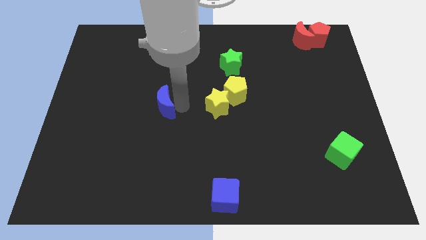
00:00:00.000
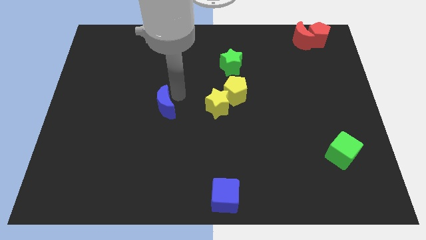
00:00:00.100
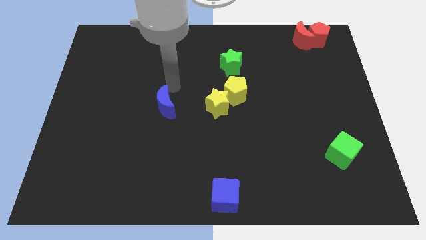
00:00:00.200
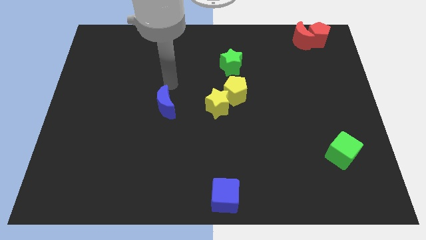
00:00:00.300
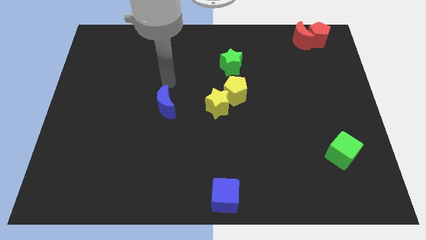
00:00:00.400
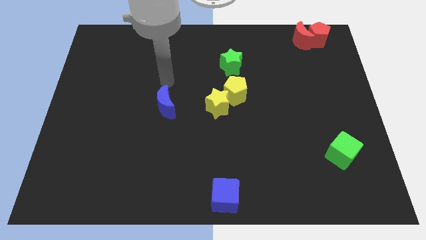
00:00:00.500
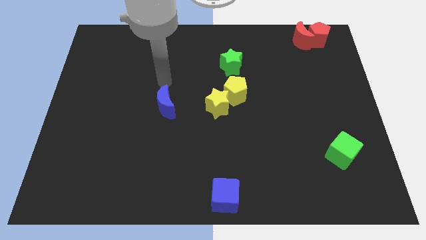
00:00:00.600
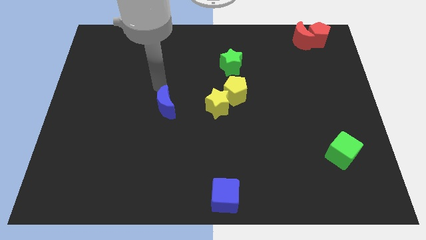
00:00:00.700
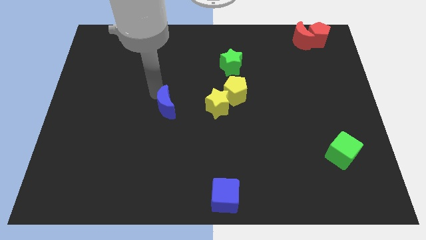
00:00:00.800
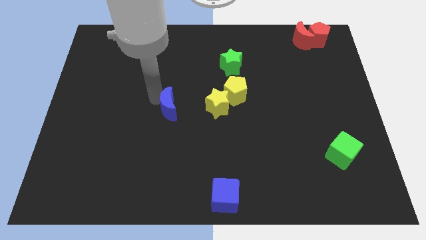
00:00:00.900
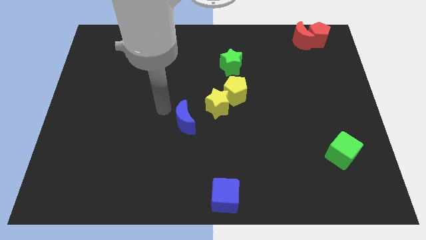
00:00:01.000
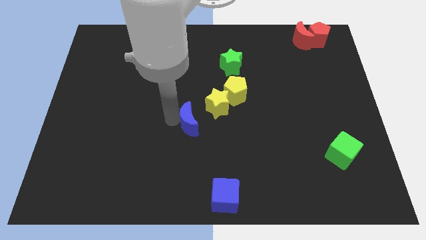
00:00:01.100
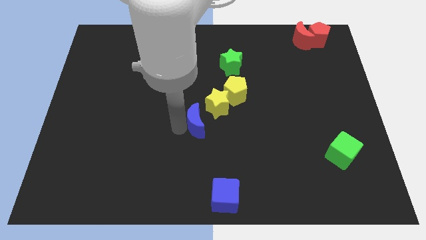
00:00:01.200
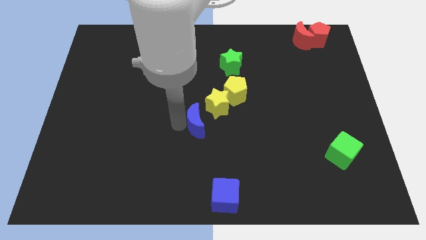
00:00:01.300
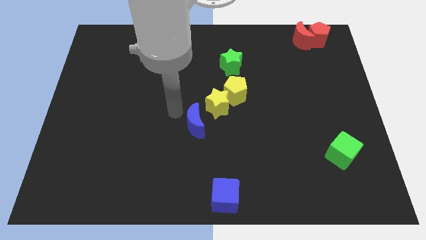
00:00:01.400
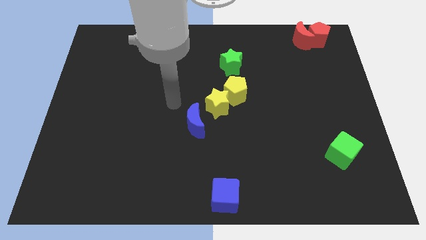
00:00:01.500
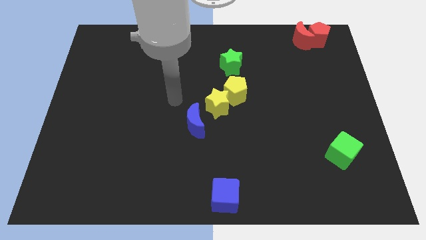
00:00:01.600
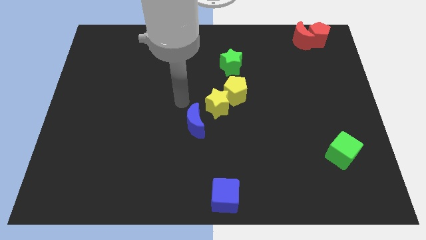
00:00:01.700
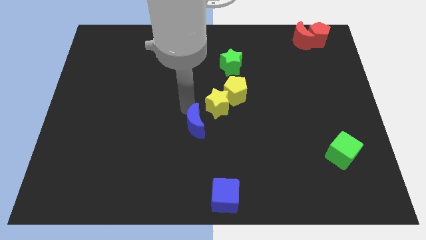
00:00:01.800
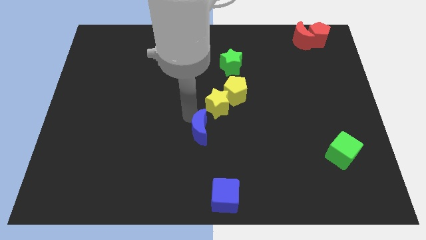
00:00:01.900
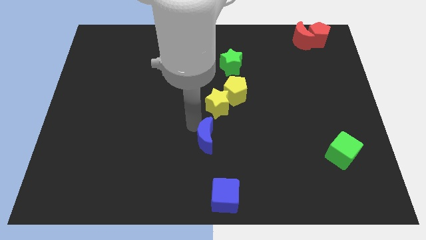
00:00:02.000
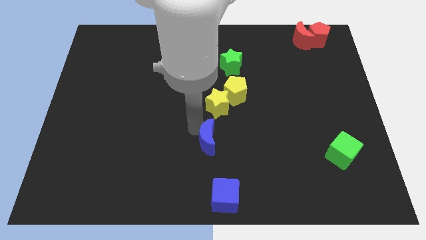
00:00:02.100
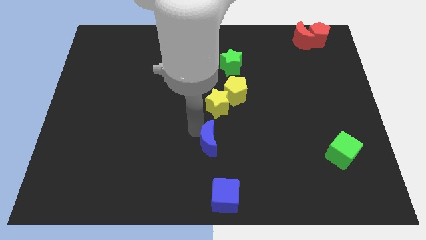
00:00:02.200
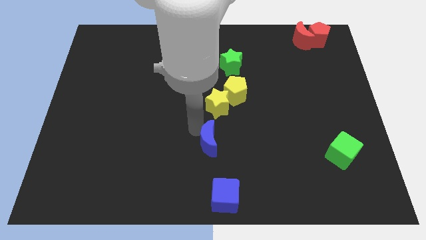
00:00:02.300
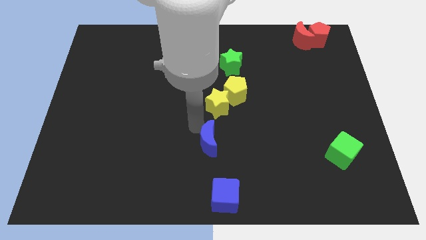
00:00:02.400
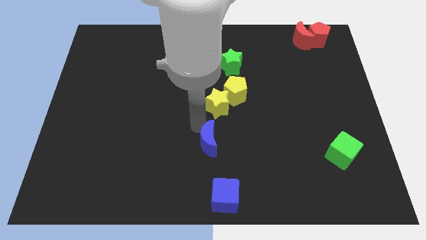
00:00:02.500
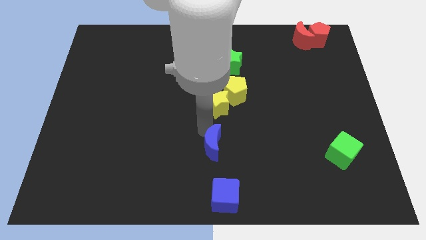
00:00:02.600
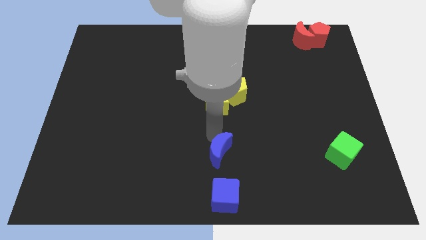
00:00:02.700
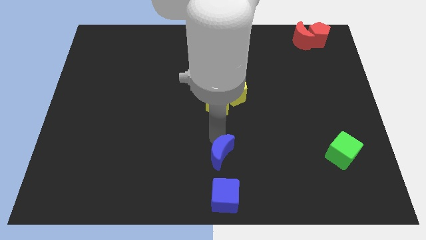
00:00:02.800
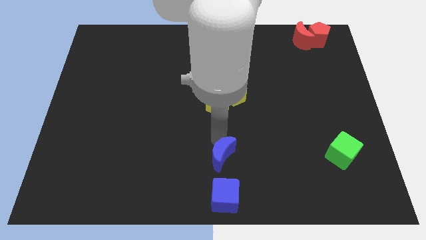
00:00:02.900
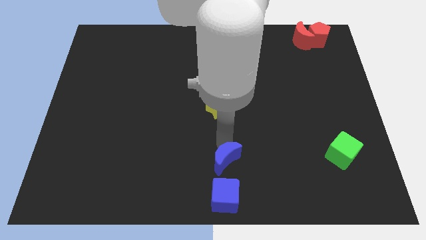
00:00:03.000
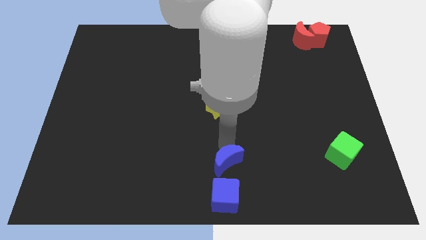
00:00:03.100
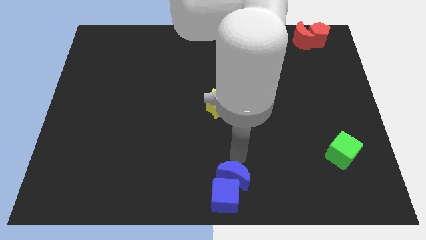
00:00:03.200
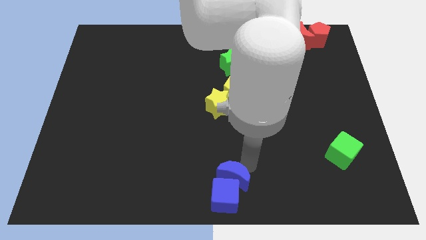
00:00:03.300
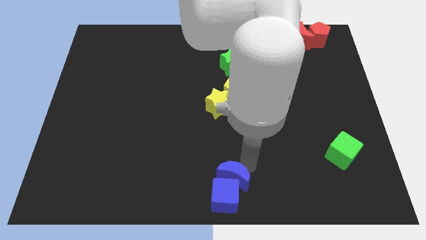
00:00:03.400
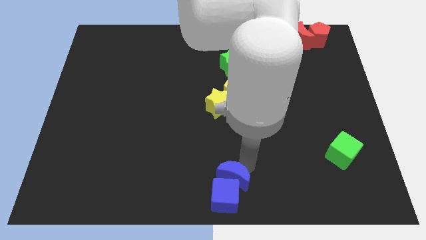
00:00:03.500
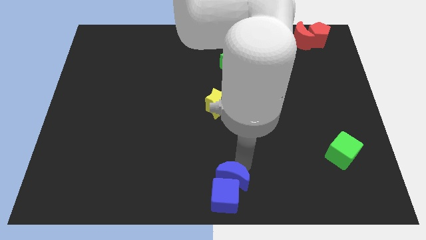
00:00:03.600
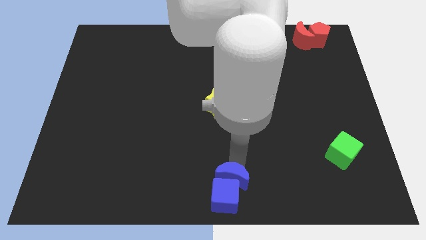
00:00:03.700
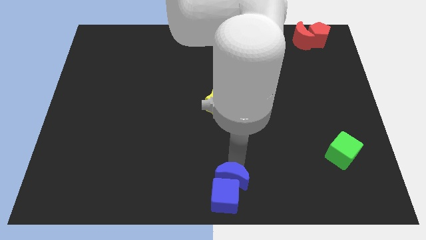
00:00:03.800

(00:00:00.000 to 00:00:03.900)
move blue moon to the top of blue cube

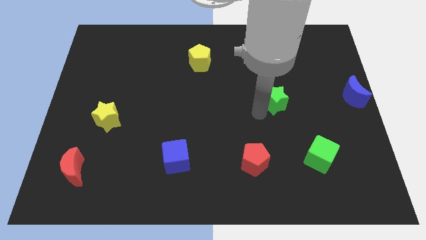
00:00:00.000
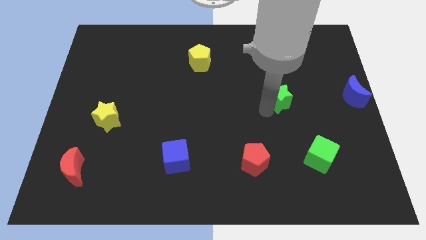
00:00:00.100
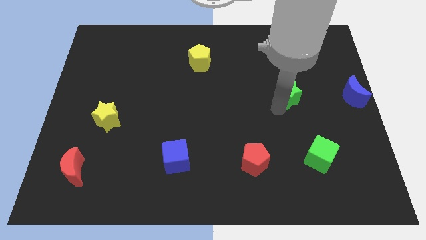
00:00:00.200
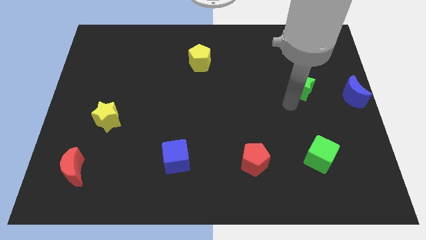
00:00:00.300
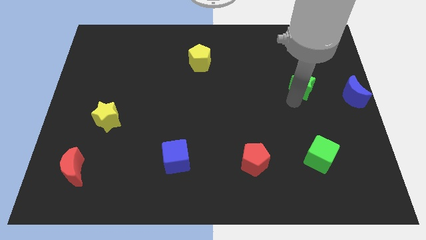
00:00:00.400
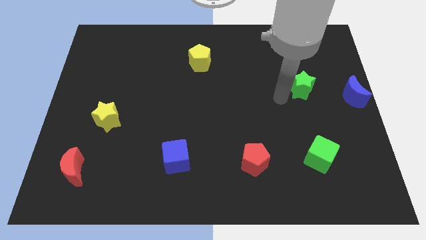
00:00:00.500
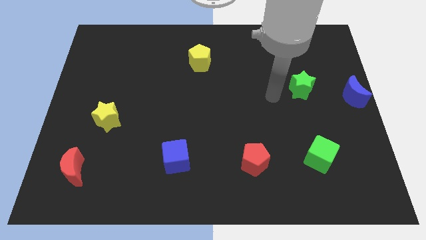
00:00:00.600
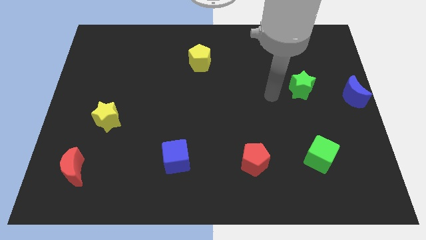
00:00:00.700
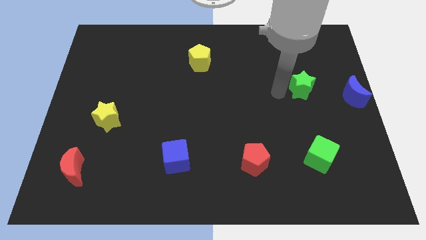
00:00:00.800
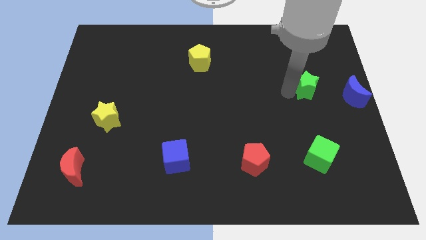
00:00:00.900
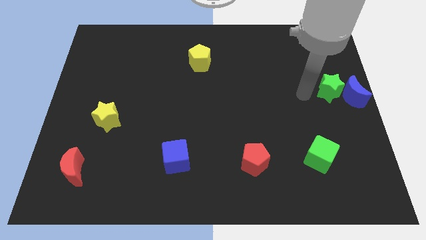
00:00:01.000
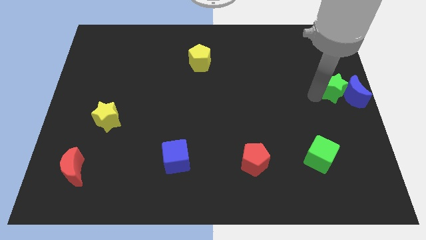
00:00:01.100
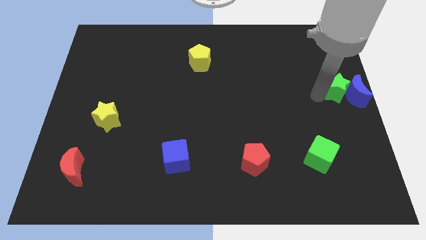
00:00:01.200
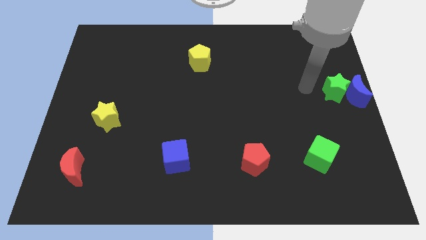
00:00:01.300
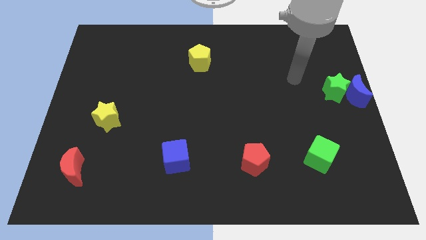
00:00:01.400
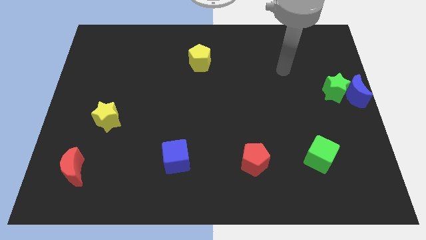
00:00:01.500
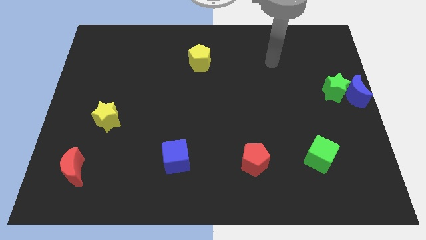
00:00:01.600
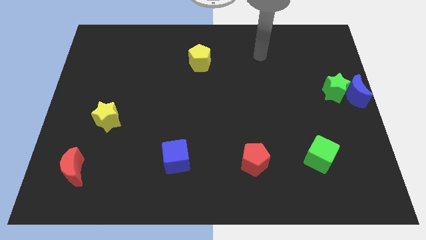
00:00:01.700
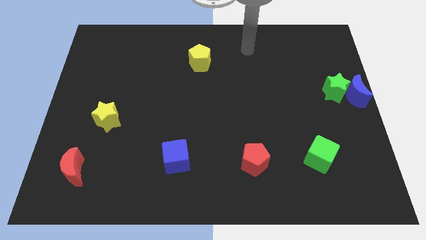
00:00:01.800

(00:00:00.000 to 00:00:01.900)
push the green star into the left side of the blue crescent

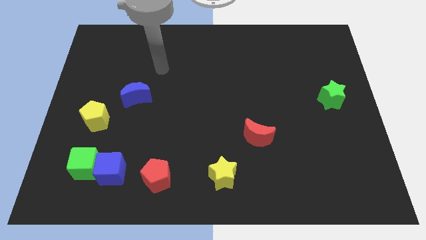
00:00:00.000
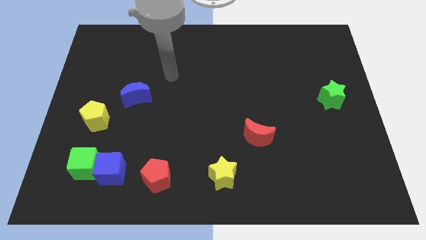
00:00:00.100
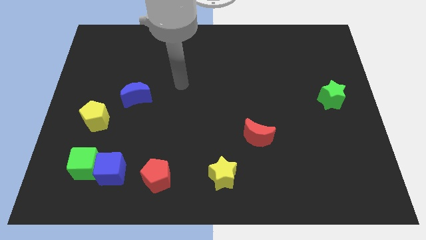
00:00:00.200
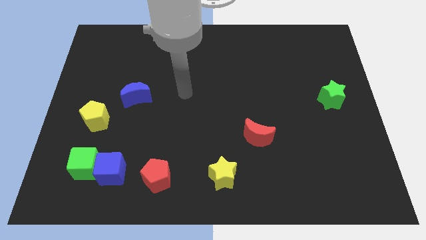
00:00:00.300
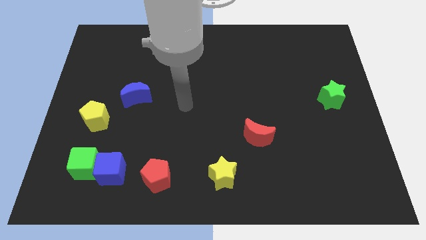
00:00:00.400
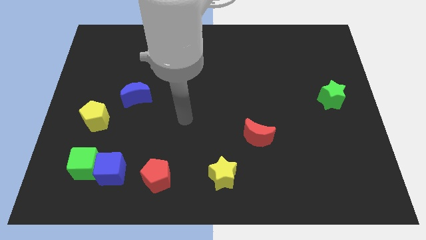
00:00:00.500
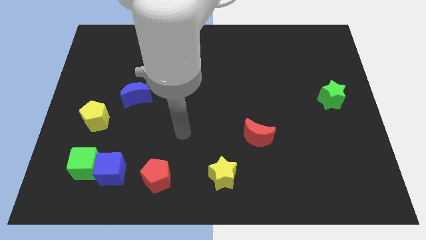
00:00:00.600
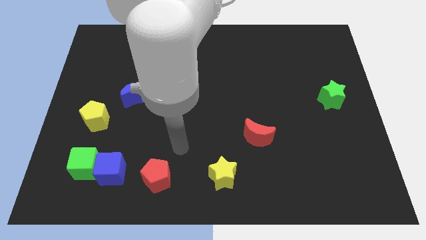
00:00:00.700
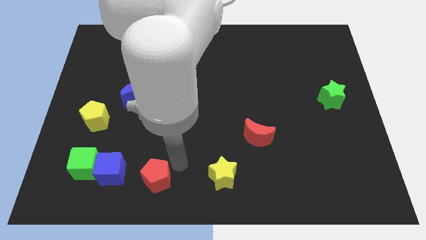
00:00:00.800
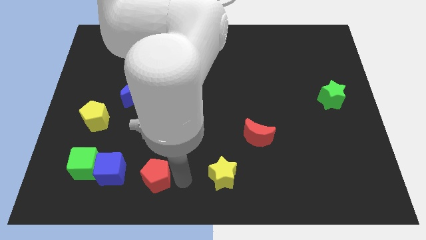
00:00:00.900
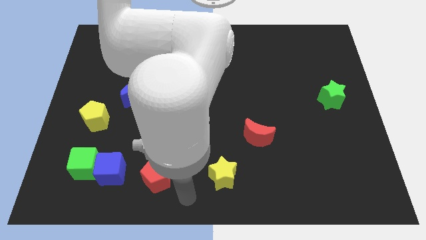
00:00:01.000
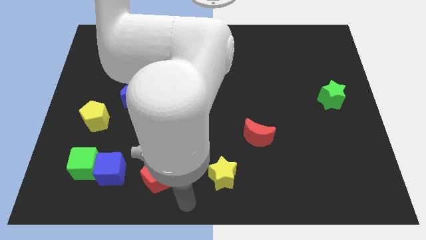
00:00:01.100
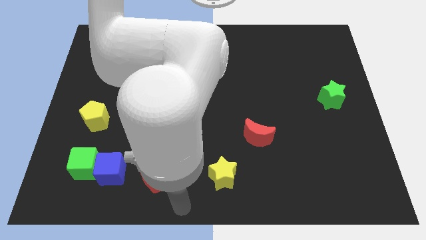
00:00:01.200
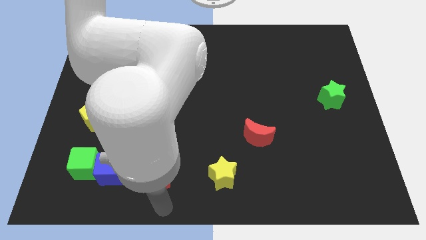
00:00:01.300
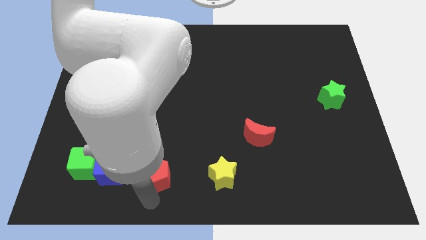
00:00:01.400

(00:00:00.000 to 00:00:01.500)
move the arm towards the red pentagon

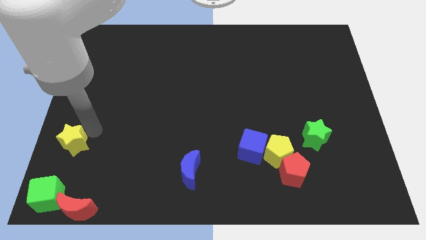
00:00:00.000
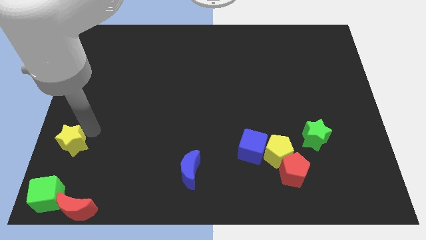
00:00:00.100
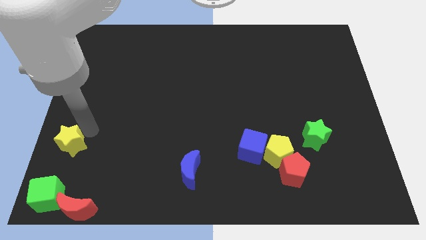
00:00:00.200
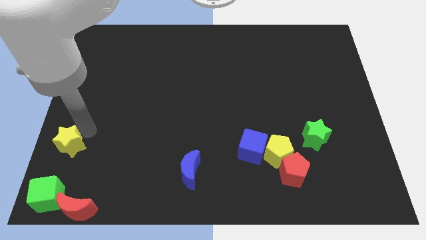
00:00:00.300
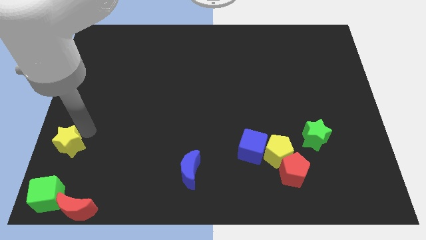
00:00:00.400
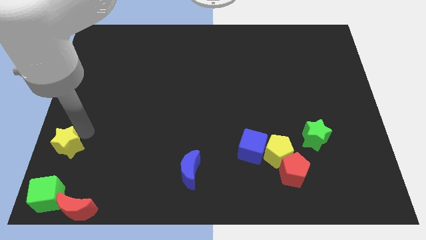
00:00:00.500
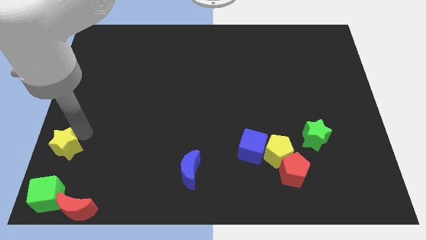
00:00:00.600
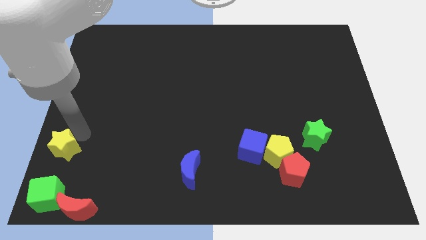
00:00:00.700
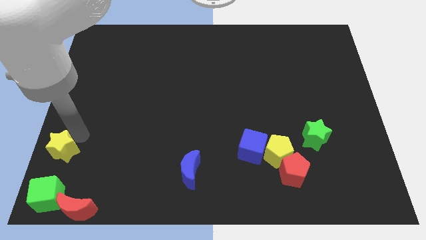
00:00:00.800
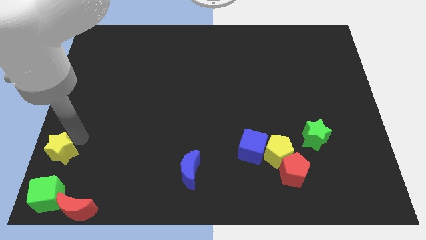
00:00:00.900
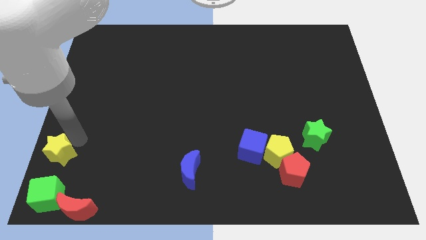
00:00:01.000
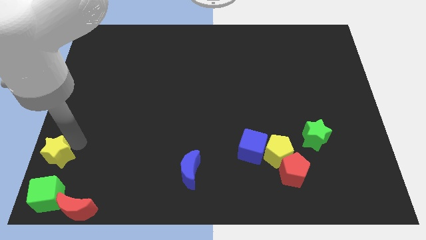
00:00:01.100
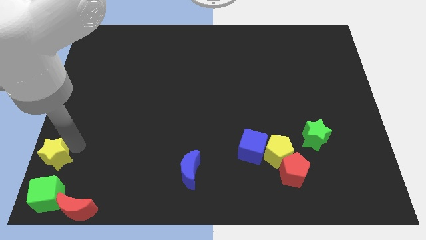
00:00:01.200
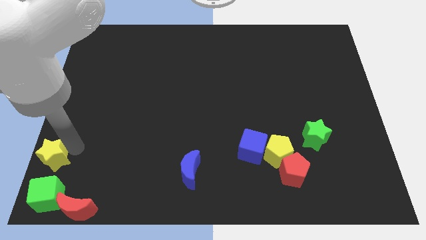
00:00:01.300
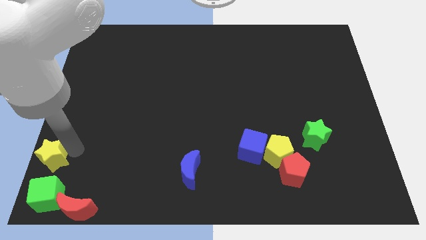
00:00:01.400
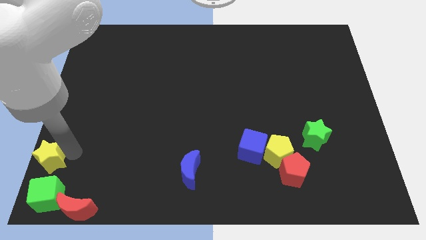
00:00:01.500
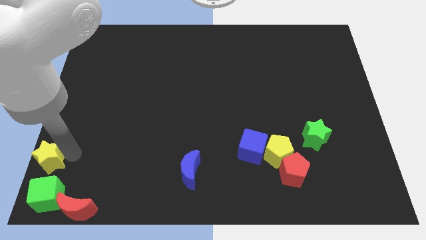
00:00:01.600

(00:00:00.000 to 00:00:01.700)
push the yellow star towards the top of green cube
